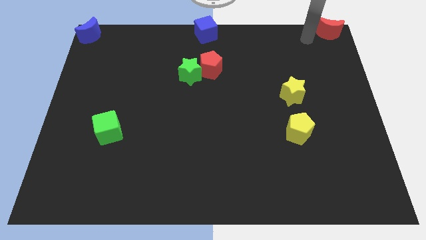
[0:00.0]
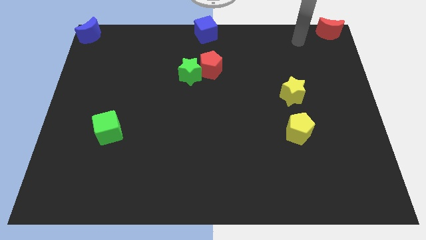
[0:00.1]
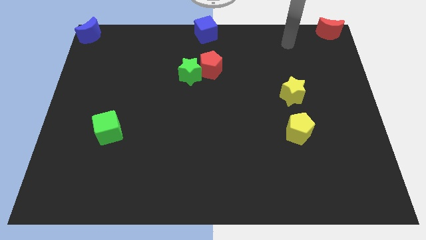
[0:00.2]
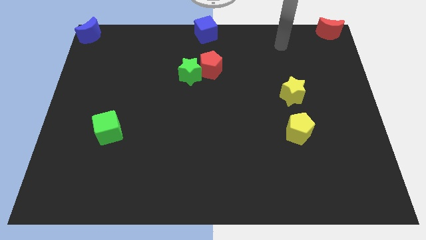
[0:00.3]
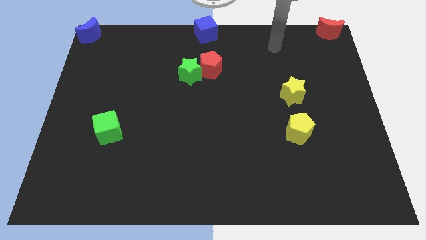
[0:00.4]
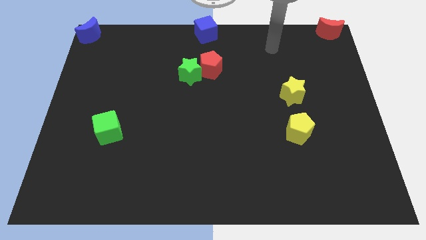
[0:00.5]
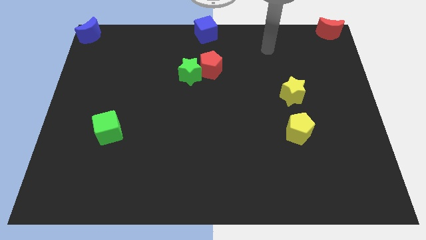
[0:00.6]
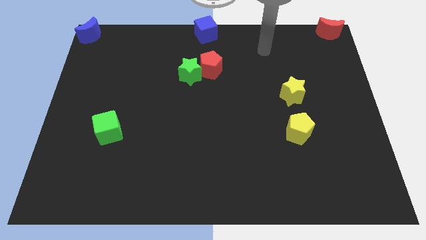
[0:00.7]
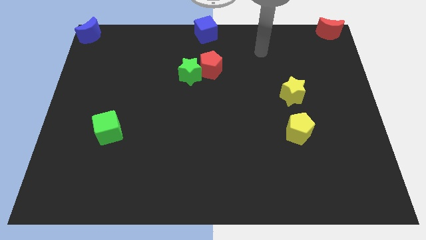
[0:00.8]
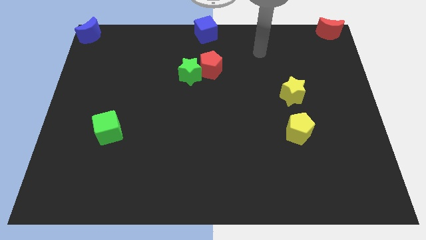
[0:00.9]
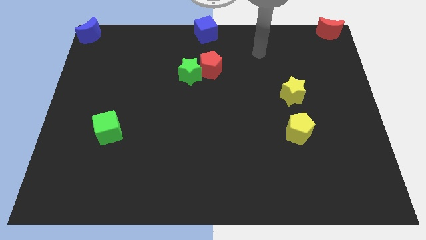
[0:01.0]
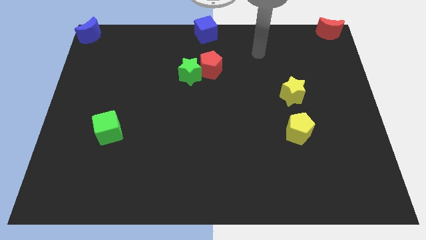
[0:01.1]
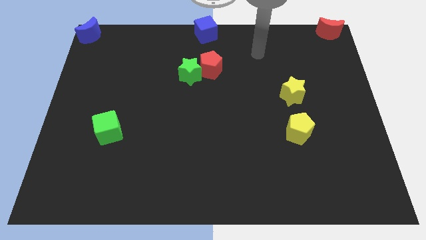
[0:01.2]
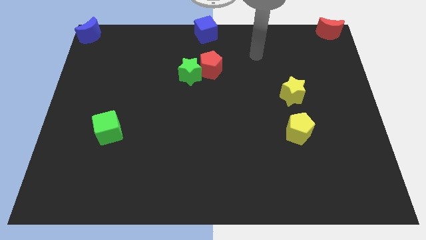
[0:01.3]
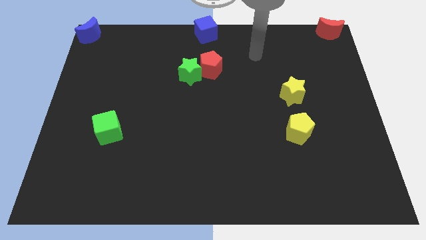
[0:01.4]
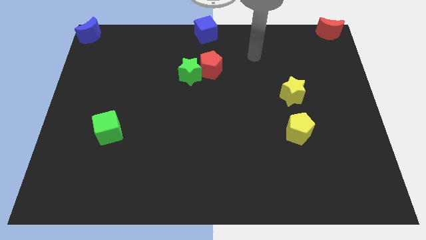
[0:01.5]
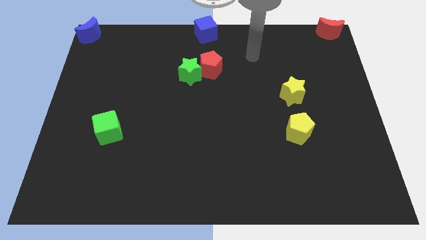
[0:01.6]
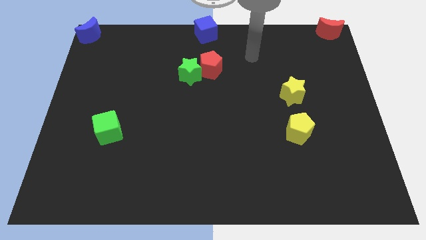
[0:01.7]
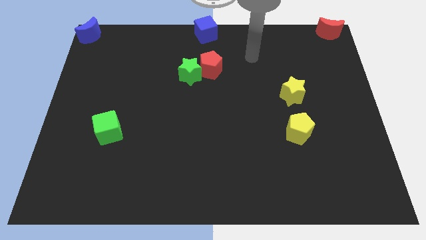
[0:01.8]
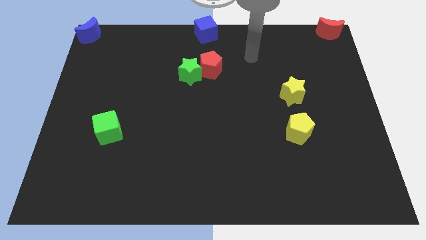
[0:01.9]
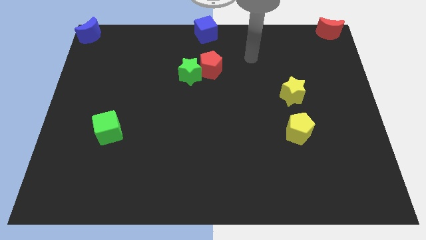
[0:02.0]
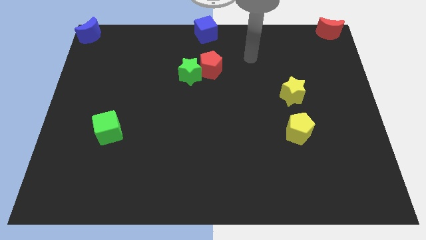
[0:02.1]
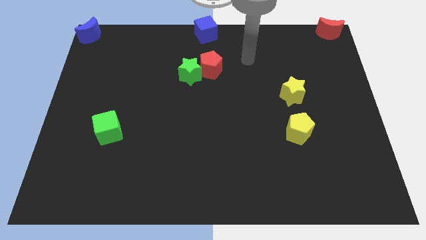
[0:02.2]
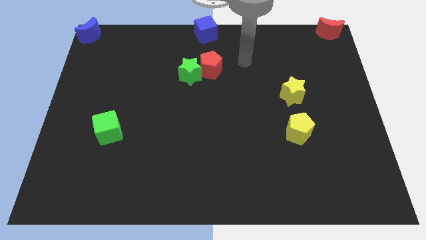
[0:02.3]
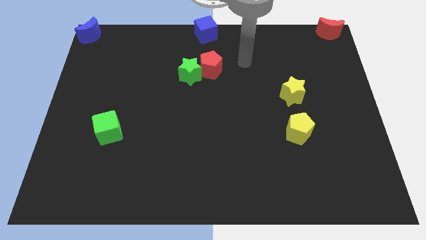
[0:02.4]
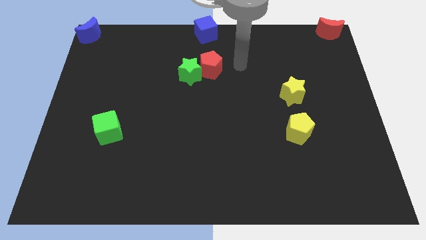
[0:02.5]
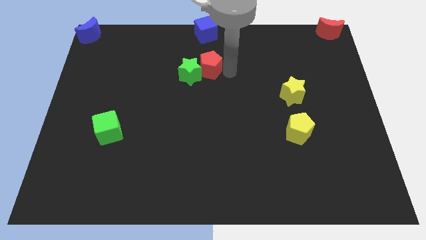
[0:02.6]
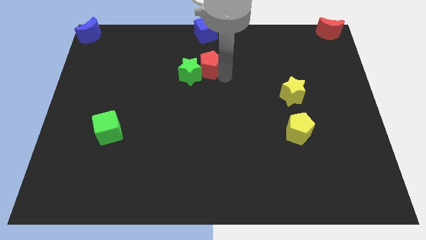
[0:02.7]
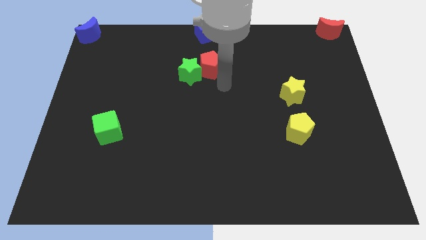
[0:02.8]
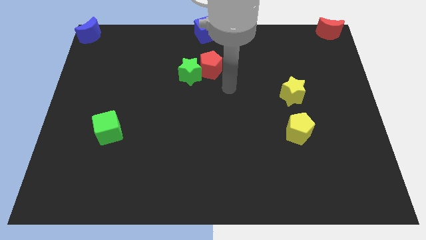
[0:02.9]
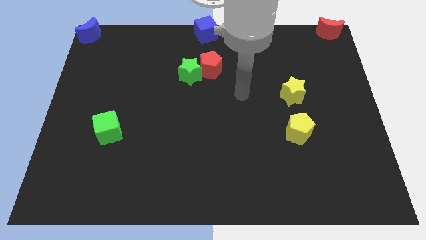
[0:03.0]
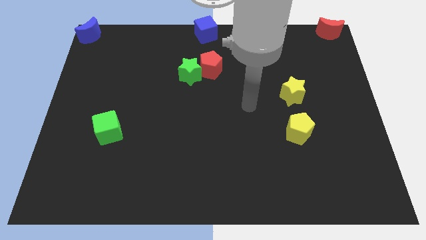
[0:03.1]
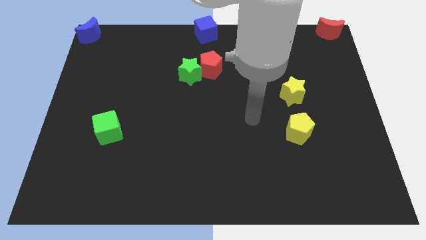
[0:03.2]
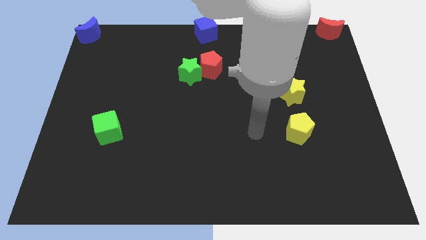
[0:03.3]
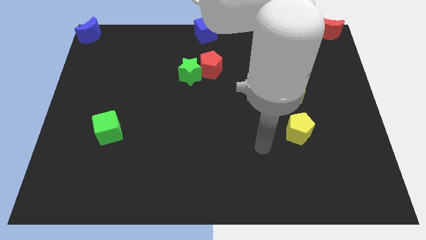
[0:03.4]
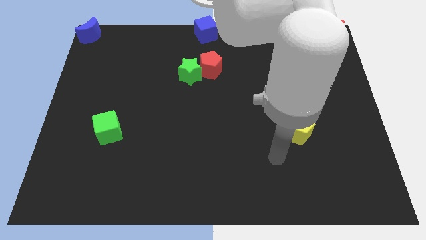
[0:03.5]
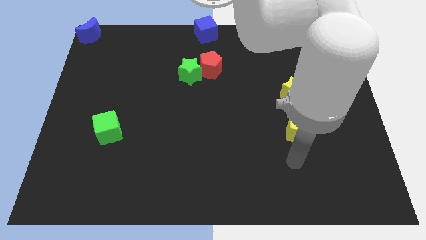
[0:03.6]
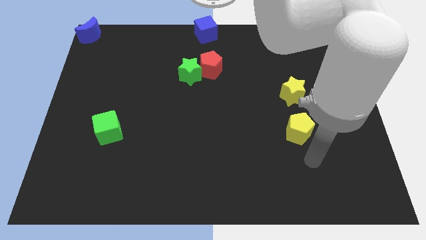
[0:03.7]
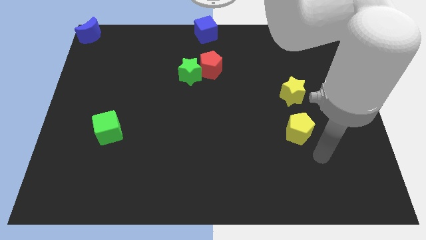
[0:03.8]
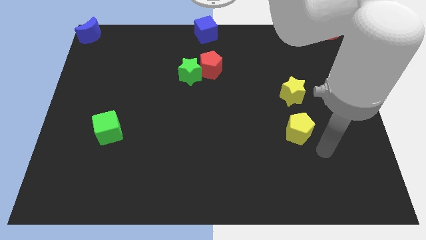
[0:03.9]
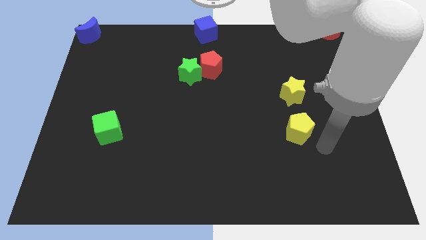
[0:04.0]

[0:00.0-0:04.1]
move your arm to the right of the yellow pentagon

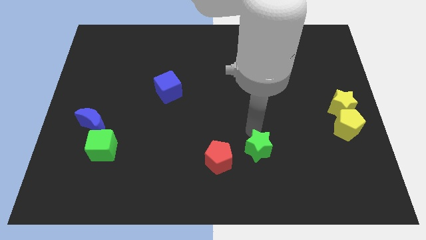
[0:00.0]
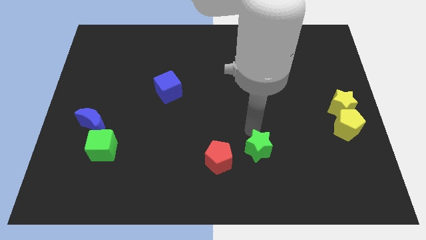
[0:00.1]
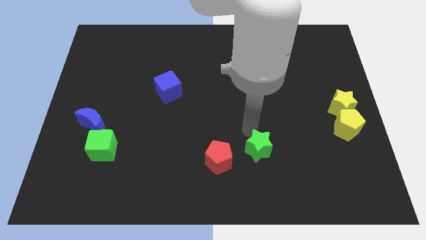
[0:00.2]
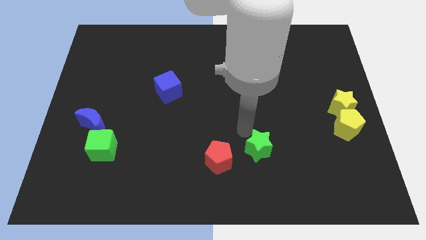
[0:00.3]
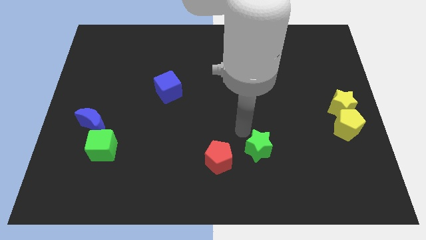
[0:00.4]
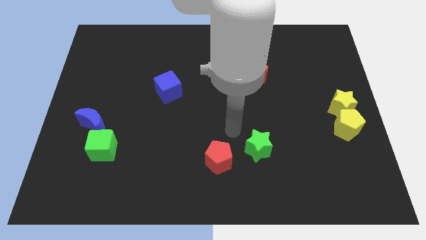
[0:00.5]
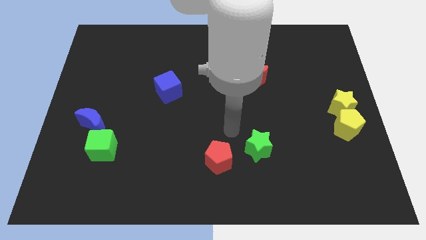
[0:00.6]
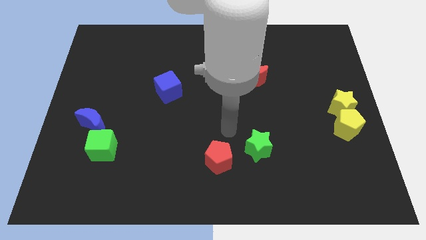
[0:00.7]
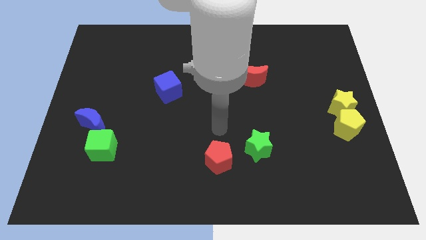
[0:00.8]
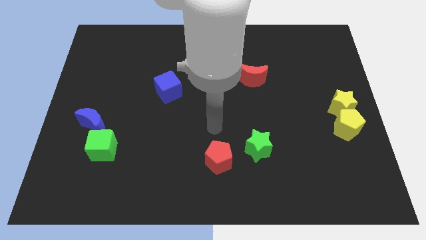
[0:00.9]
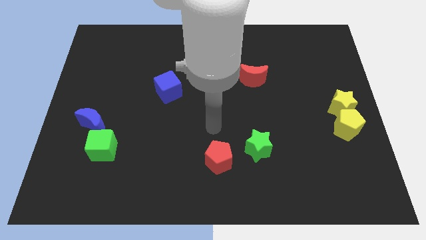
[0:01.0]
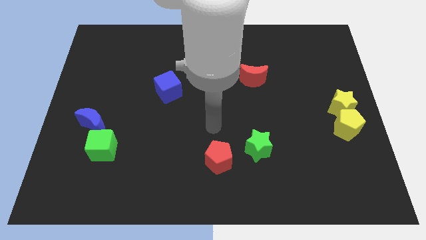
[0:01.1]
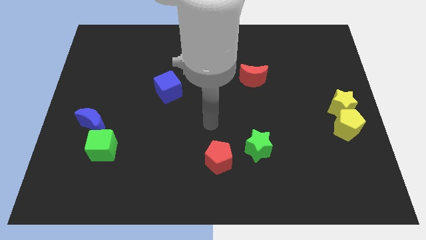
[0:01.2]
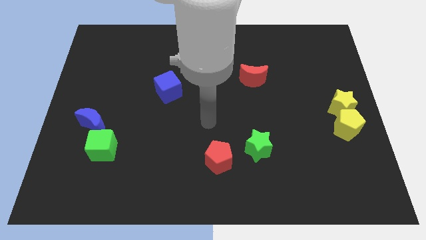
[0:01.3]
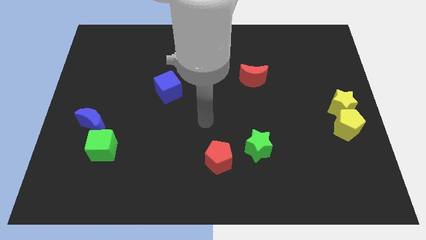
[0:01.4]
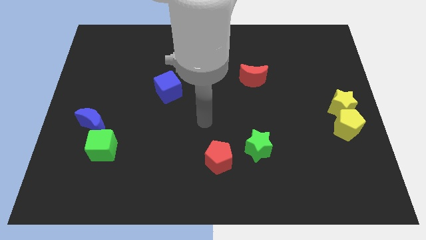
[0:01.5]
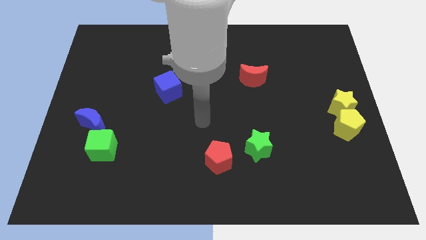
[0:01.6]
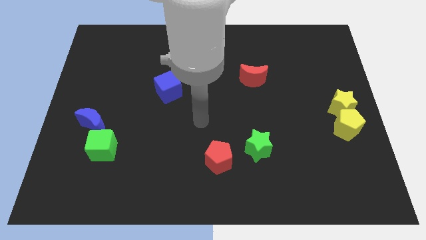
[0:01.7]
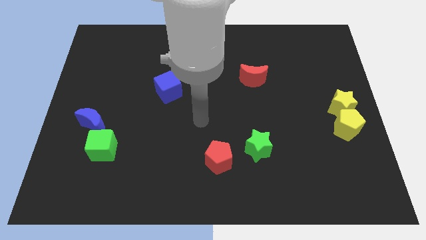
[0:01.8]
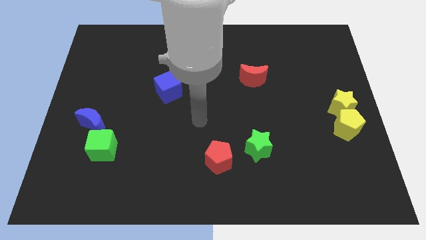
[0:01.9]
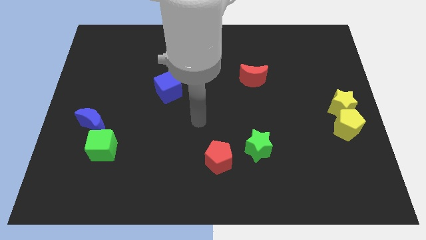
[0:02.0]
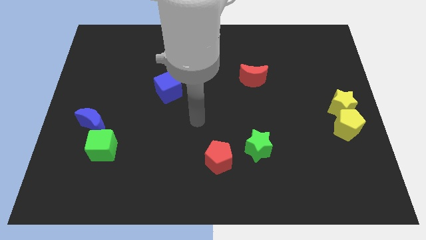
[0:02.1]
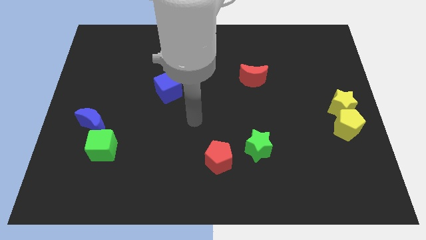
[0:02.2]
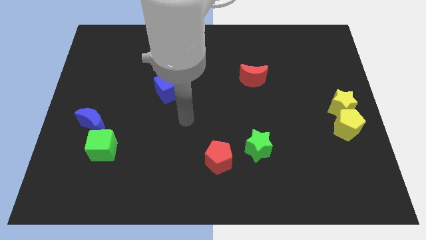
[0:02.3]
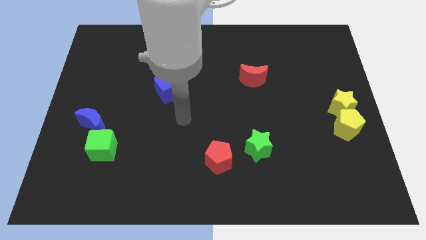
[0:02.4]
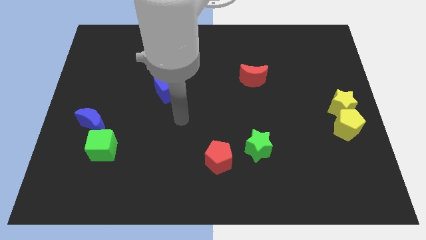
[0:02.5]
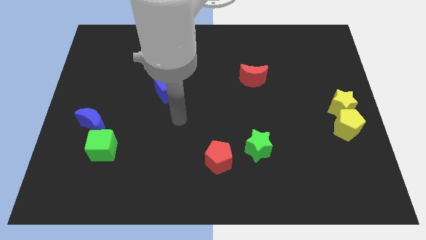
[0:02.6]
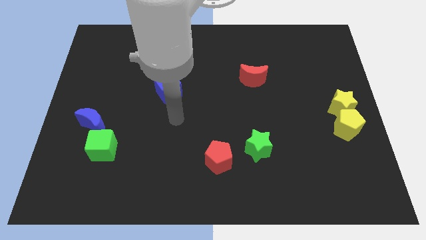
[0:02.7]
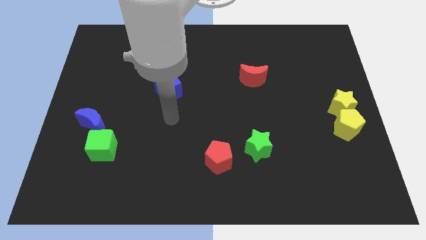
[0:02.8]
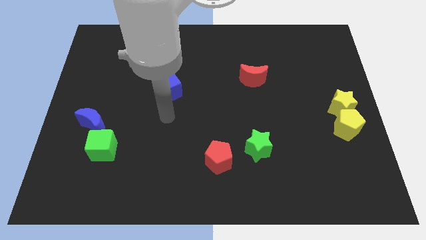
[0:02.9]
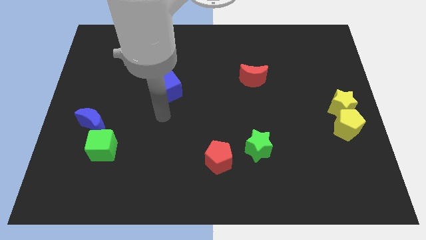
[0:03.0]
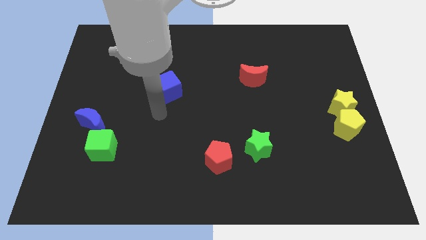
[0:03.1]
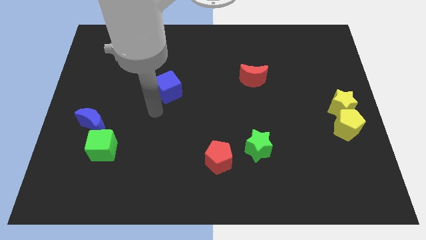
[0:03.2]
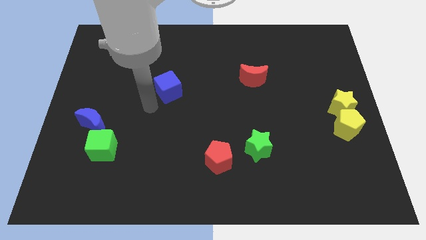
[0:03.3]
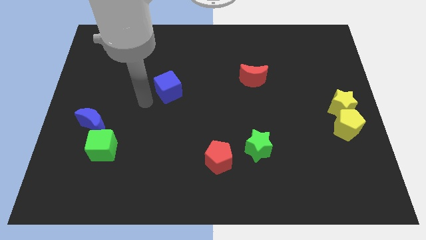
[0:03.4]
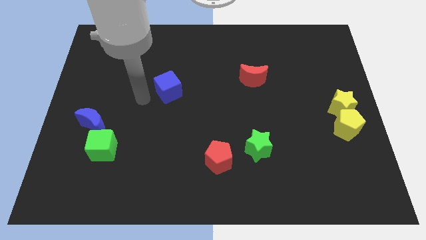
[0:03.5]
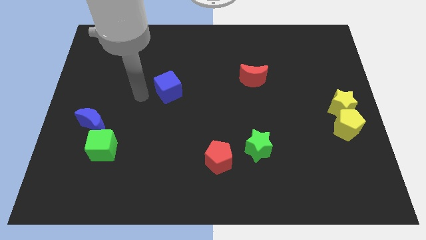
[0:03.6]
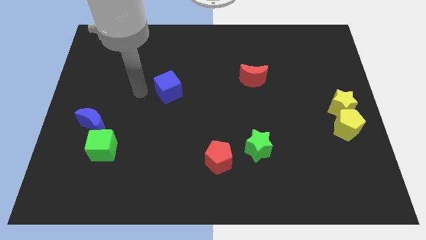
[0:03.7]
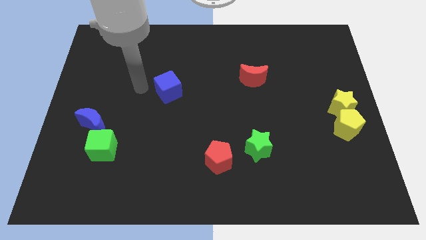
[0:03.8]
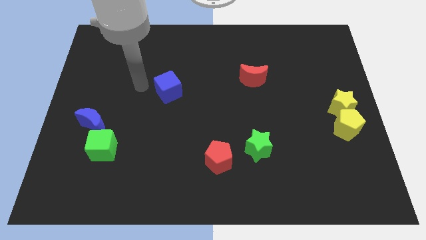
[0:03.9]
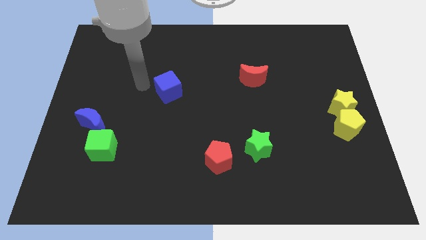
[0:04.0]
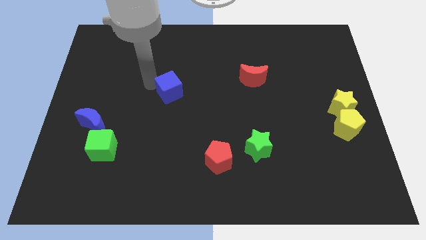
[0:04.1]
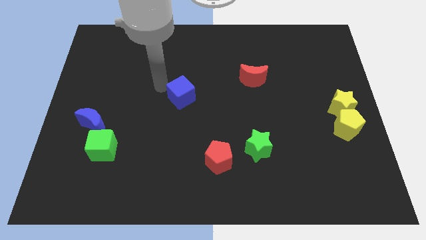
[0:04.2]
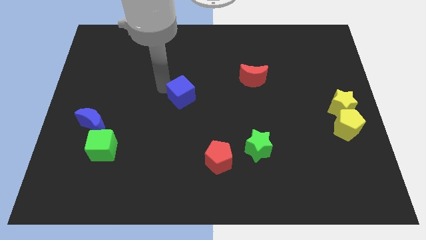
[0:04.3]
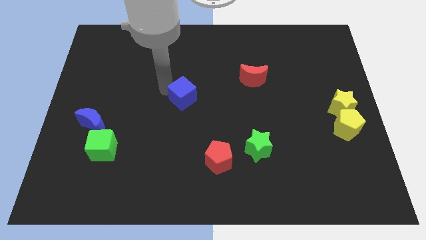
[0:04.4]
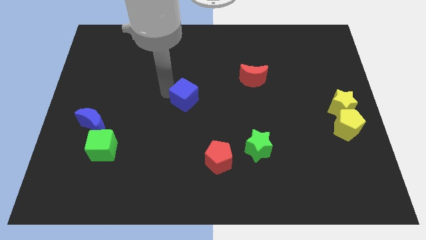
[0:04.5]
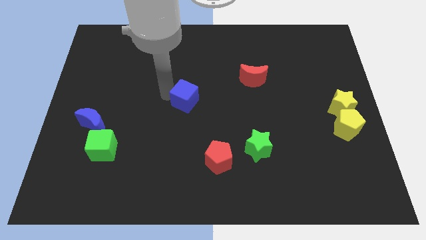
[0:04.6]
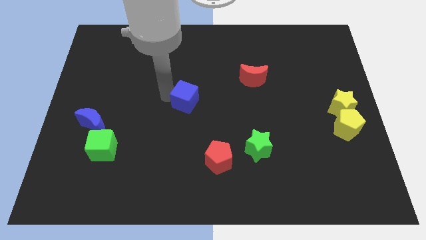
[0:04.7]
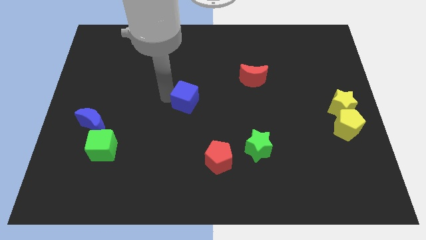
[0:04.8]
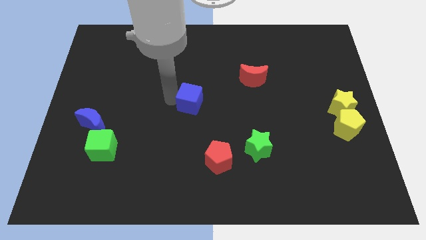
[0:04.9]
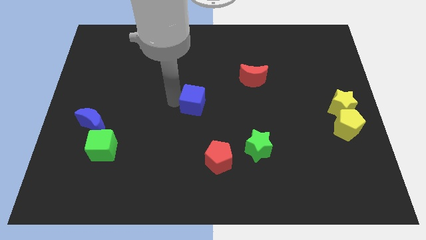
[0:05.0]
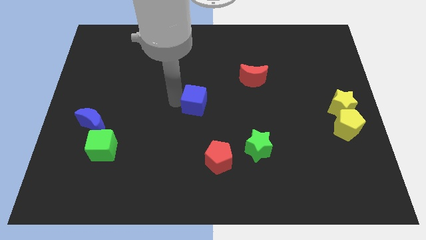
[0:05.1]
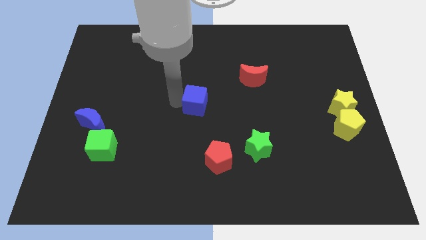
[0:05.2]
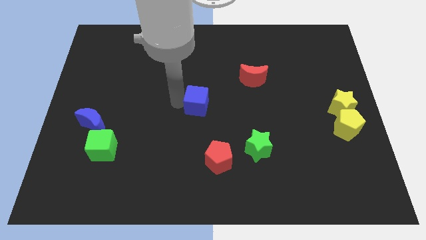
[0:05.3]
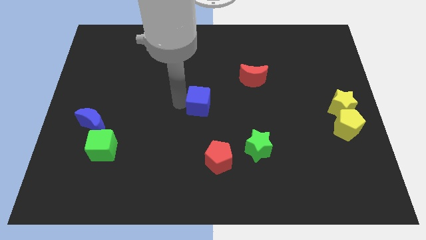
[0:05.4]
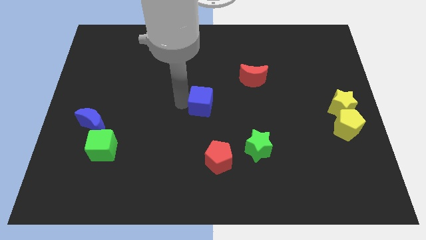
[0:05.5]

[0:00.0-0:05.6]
push the blue cube towards the center of the board
